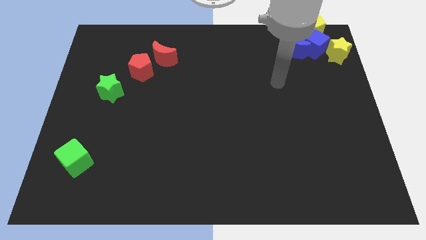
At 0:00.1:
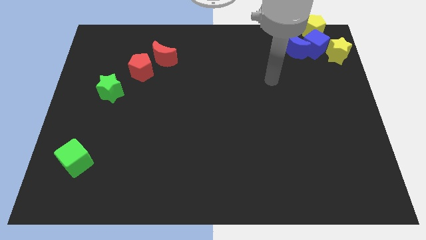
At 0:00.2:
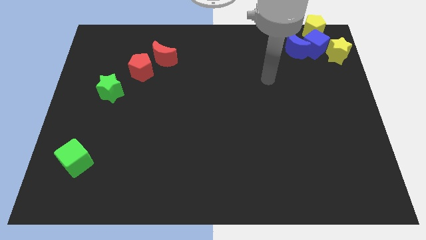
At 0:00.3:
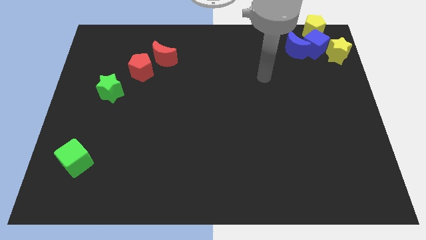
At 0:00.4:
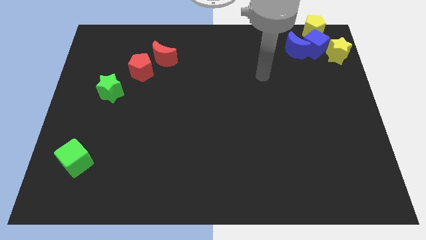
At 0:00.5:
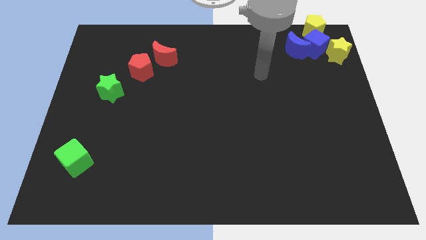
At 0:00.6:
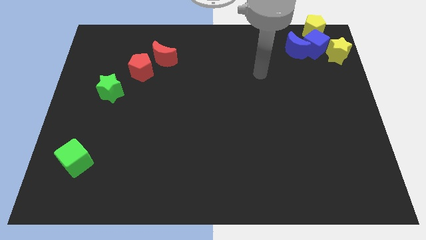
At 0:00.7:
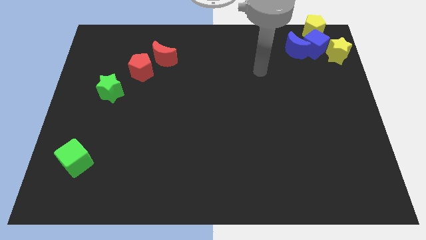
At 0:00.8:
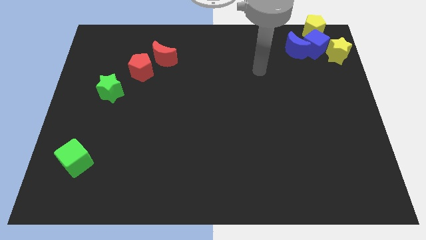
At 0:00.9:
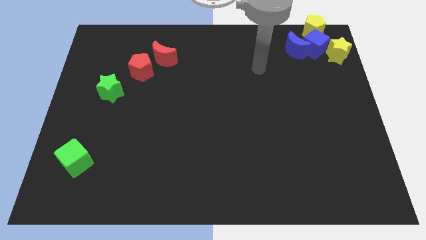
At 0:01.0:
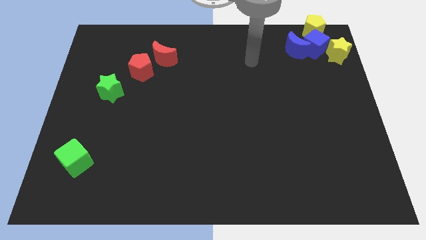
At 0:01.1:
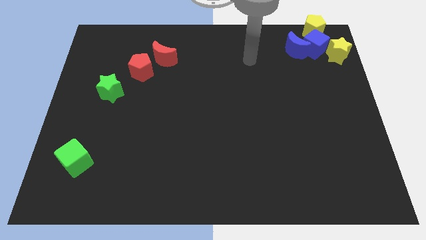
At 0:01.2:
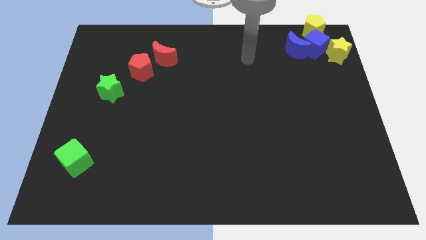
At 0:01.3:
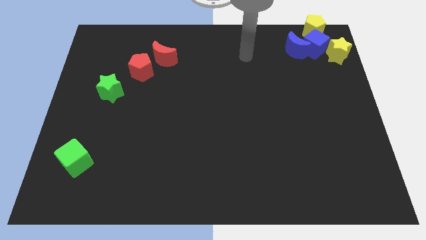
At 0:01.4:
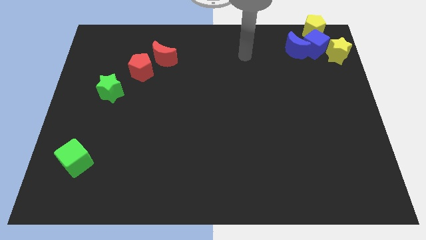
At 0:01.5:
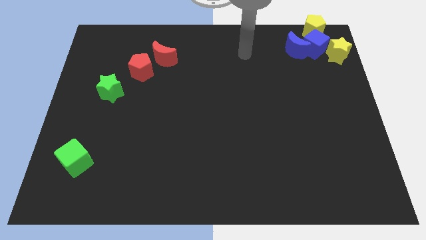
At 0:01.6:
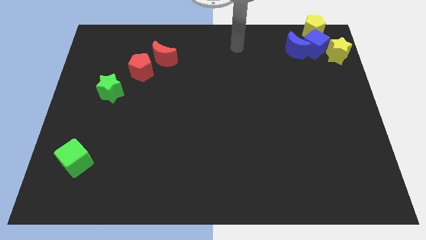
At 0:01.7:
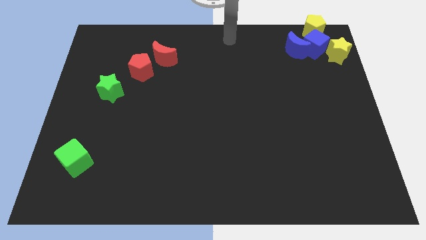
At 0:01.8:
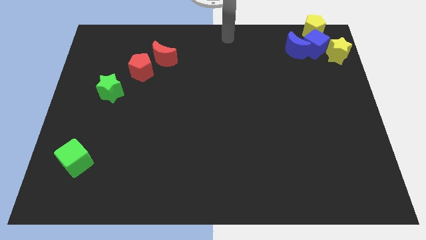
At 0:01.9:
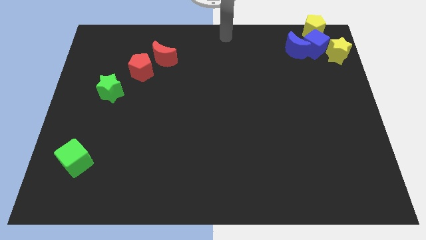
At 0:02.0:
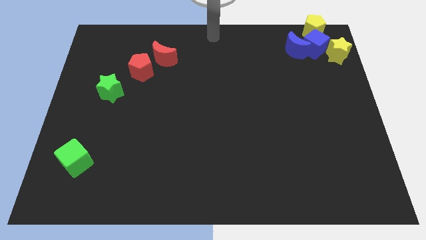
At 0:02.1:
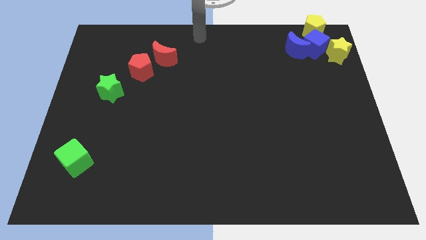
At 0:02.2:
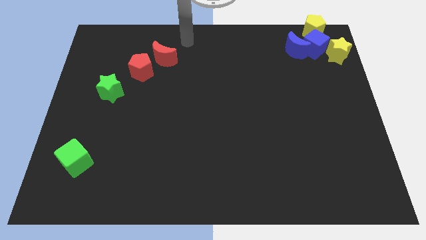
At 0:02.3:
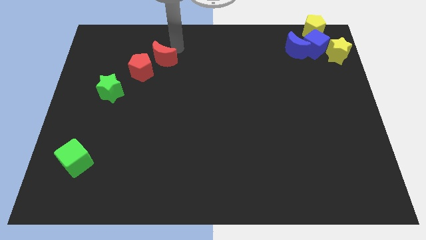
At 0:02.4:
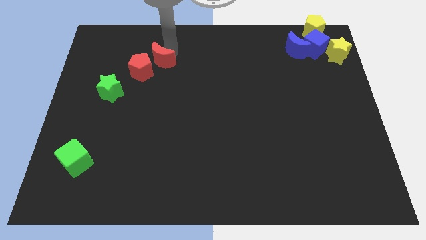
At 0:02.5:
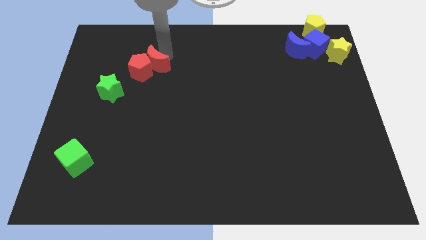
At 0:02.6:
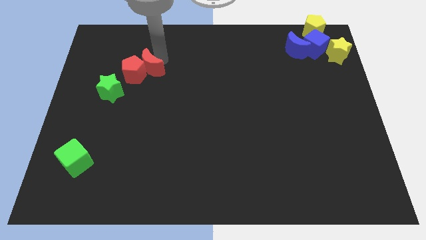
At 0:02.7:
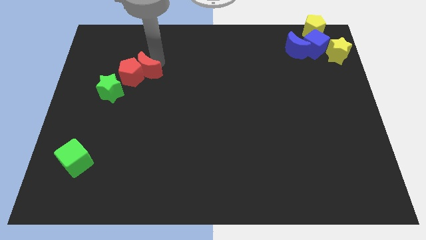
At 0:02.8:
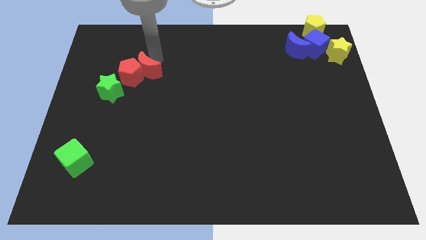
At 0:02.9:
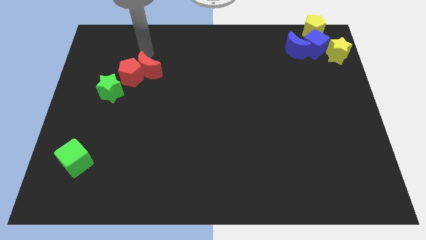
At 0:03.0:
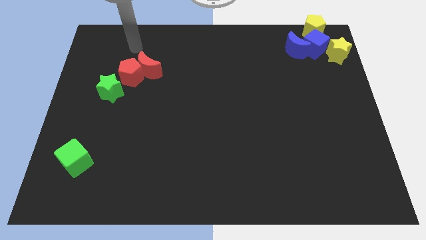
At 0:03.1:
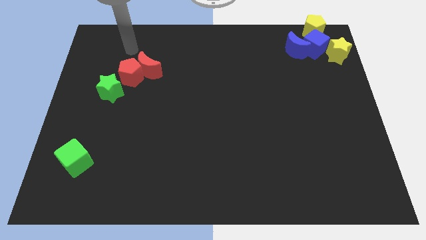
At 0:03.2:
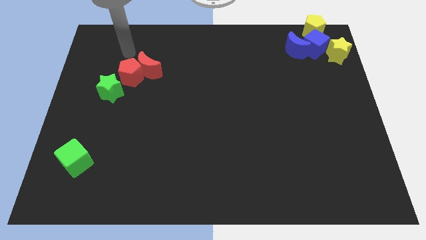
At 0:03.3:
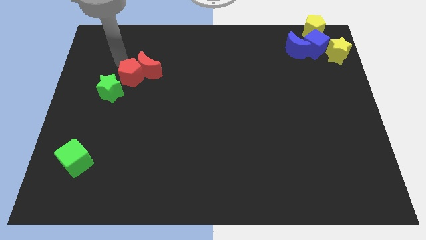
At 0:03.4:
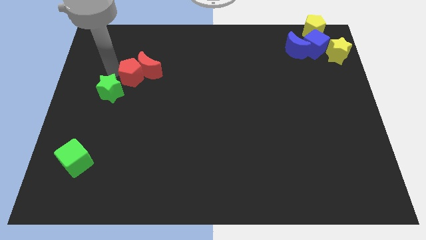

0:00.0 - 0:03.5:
push red crescent in to red pentagon

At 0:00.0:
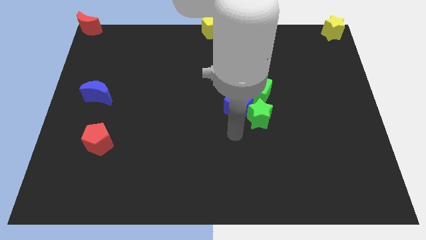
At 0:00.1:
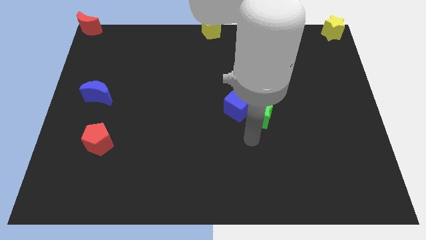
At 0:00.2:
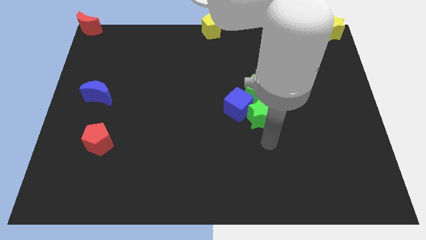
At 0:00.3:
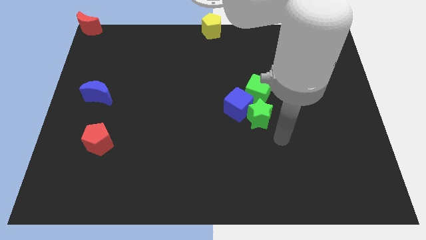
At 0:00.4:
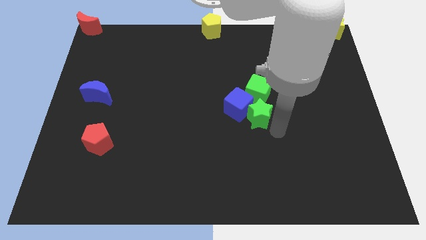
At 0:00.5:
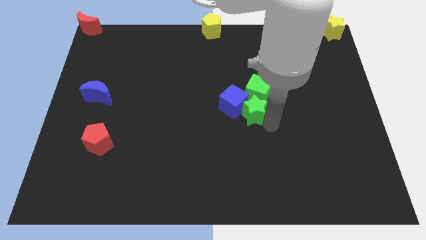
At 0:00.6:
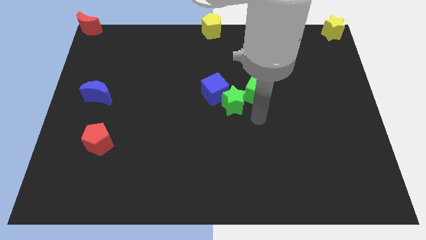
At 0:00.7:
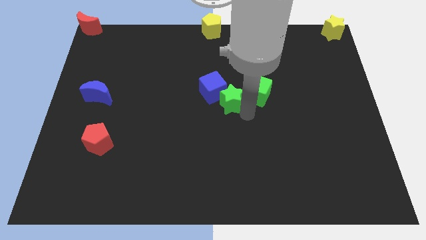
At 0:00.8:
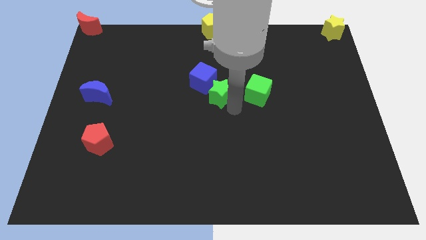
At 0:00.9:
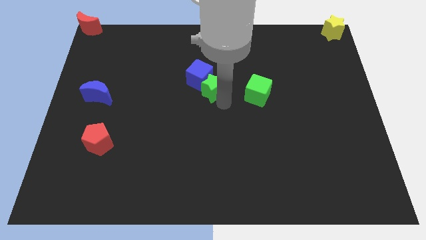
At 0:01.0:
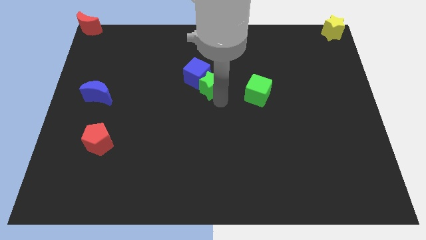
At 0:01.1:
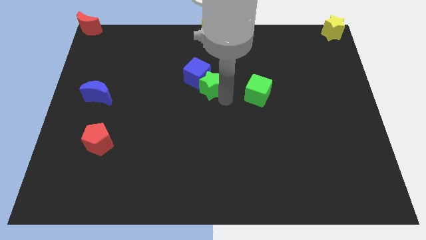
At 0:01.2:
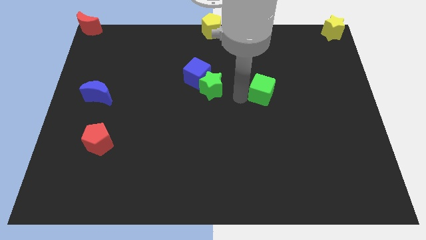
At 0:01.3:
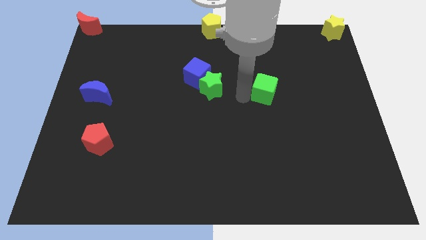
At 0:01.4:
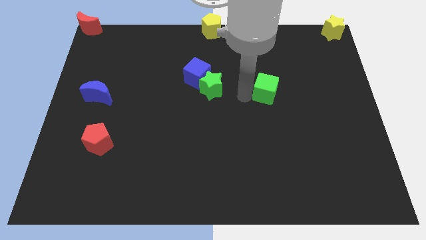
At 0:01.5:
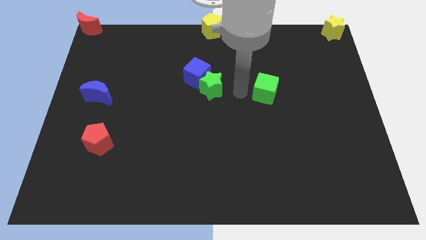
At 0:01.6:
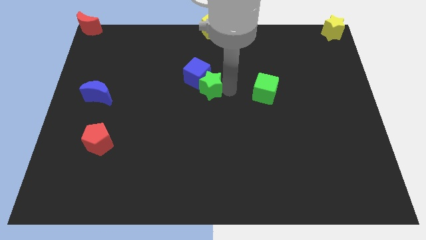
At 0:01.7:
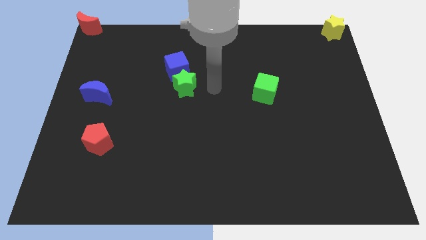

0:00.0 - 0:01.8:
push the green star along with the blue cube to the left

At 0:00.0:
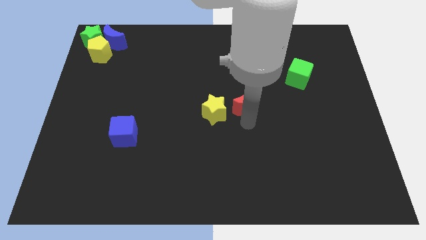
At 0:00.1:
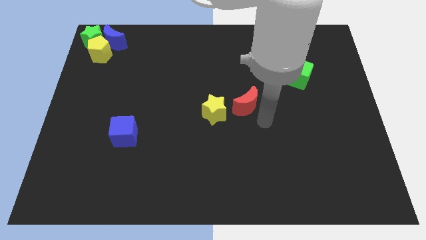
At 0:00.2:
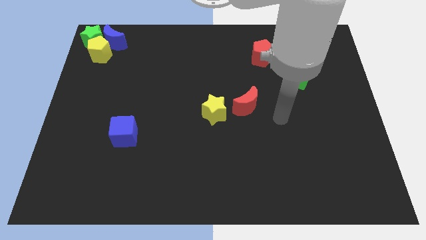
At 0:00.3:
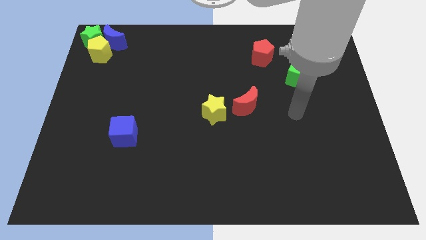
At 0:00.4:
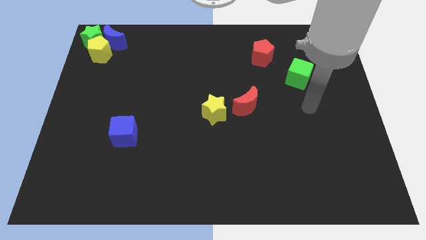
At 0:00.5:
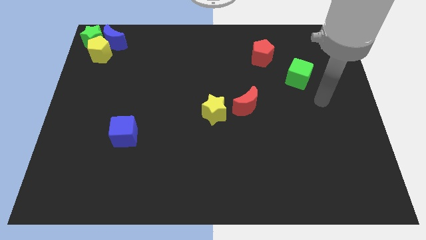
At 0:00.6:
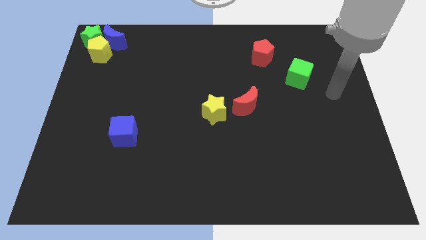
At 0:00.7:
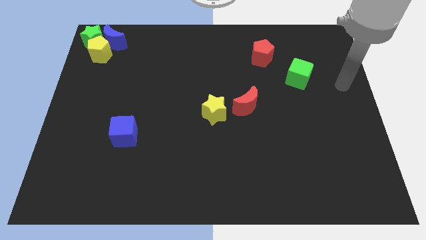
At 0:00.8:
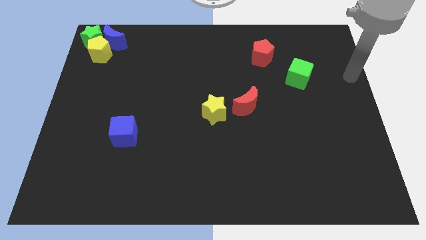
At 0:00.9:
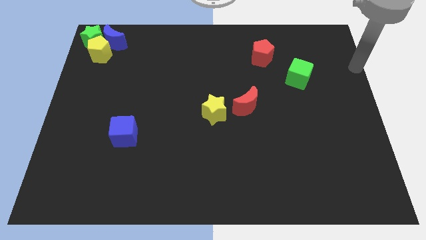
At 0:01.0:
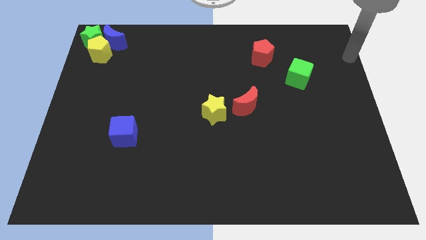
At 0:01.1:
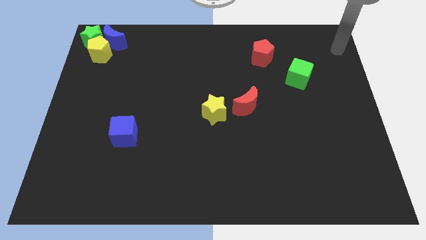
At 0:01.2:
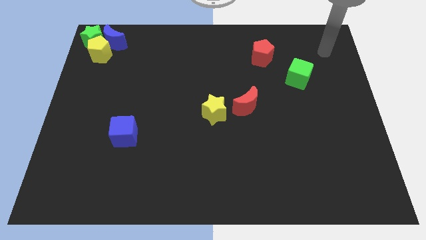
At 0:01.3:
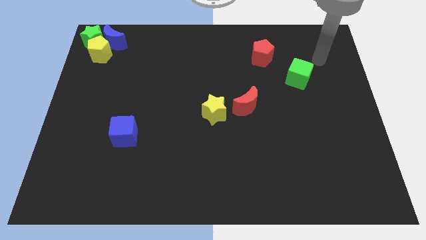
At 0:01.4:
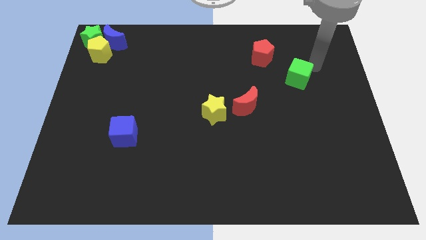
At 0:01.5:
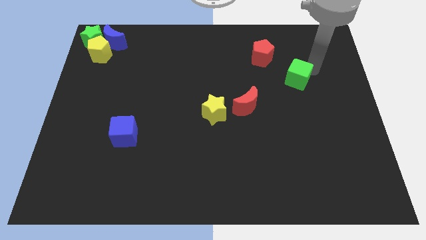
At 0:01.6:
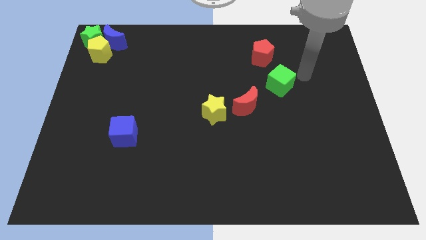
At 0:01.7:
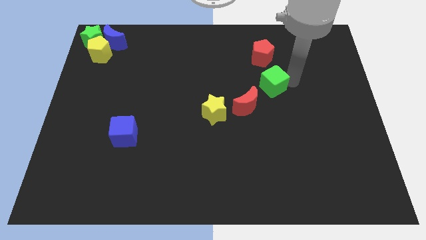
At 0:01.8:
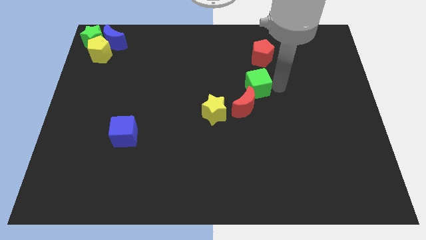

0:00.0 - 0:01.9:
place the green cube in between red crescent and red pentagon

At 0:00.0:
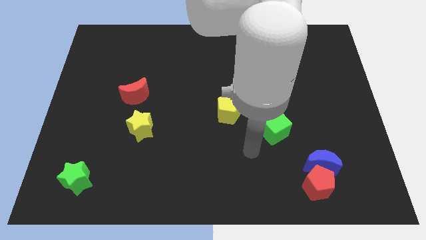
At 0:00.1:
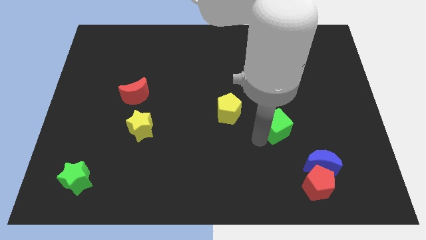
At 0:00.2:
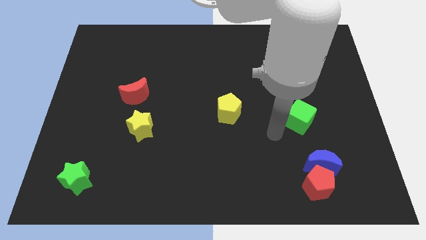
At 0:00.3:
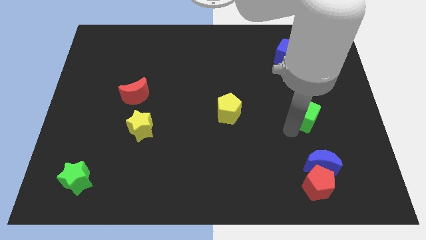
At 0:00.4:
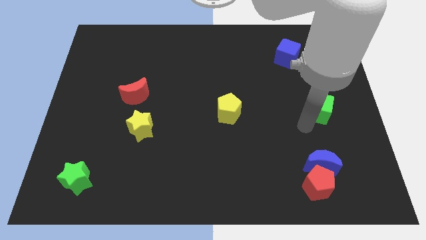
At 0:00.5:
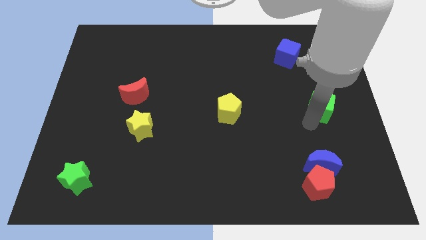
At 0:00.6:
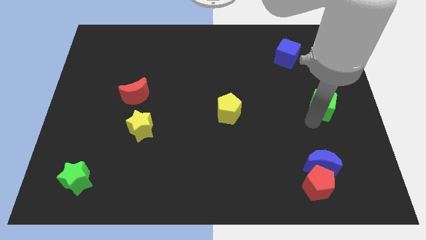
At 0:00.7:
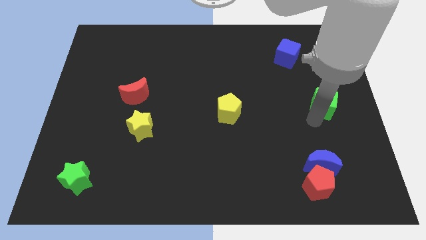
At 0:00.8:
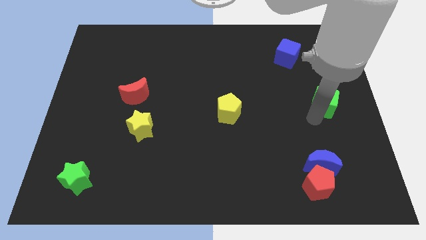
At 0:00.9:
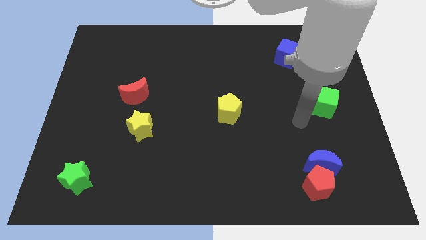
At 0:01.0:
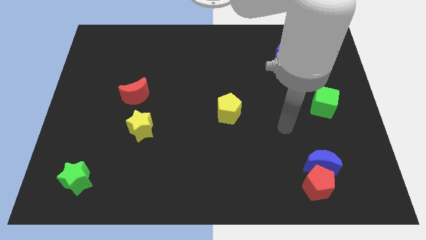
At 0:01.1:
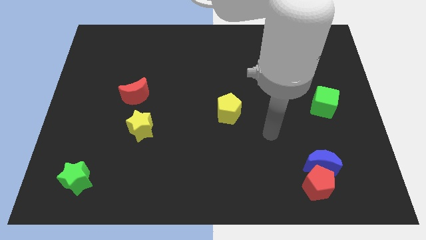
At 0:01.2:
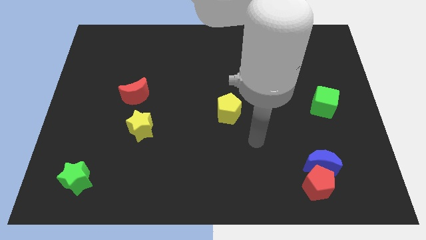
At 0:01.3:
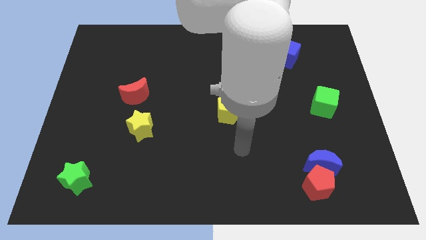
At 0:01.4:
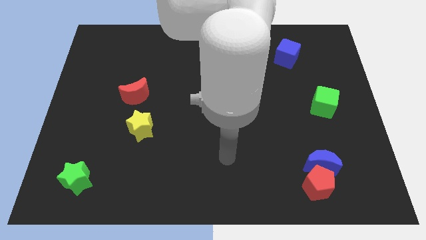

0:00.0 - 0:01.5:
push the green cube near to the right center

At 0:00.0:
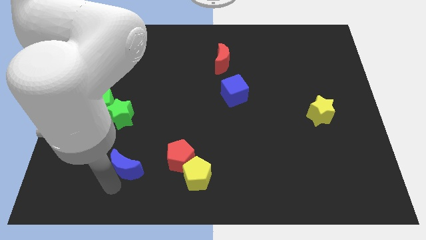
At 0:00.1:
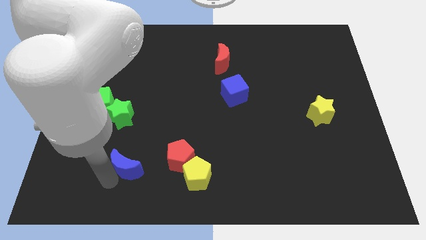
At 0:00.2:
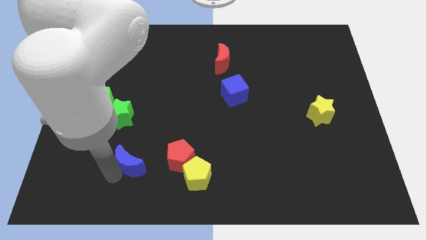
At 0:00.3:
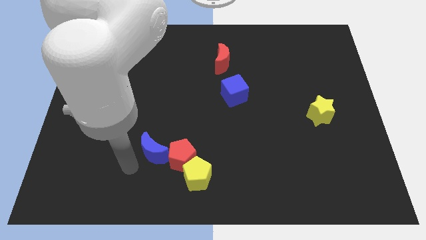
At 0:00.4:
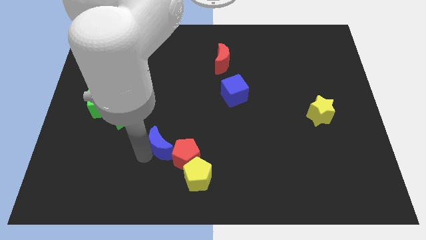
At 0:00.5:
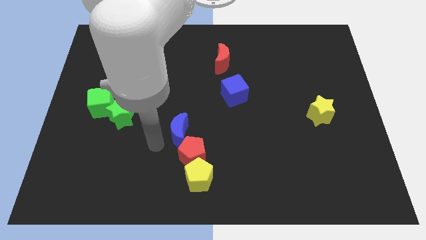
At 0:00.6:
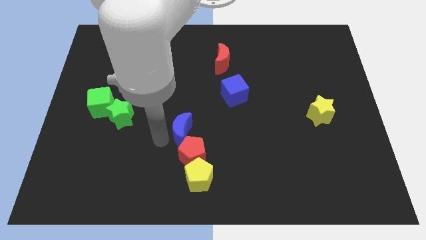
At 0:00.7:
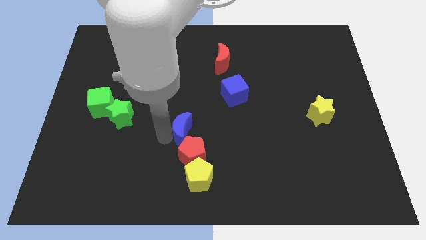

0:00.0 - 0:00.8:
place blue moon to the top of red pentagon
